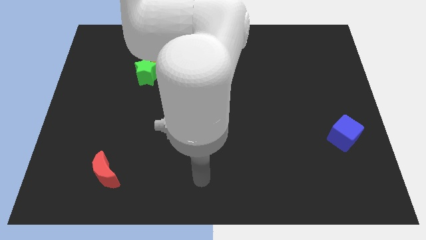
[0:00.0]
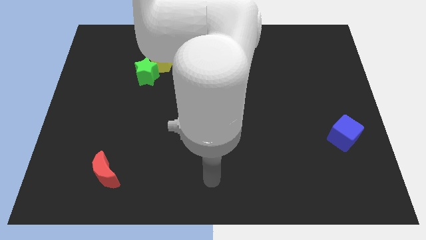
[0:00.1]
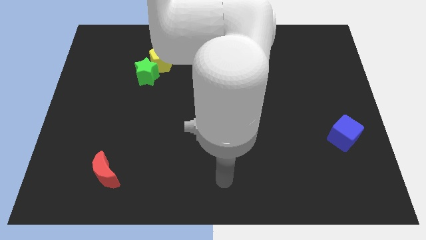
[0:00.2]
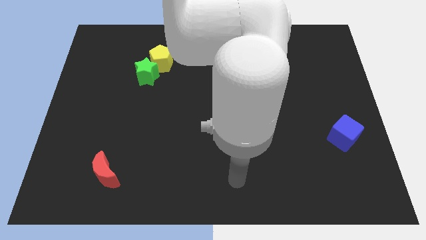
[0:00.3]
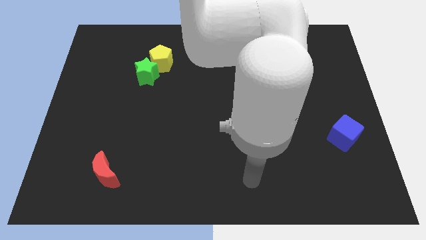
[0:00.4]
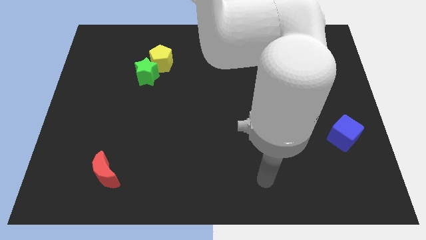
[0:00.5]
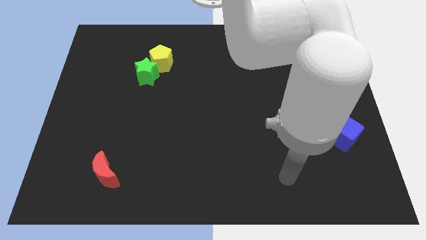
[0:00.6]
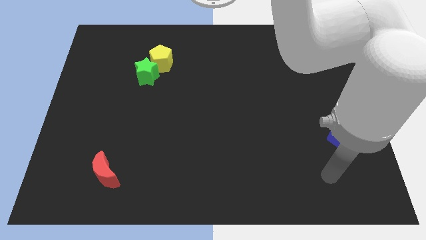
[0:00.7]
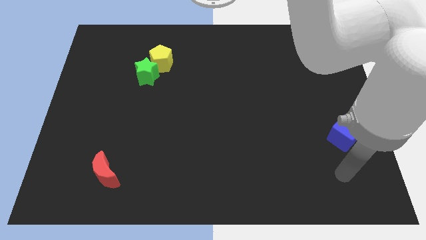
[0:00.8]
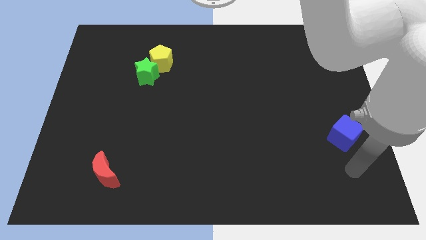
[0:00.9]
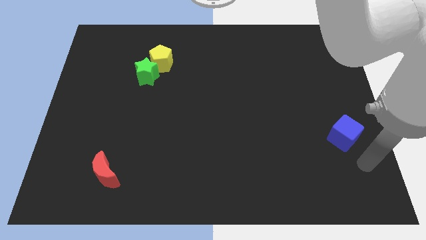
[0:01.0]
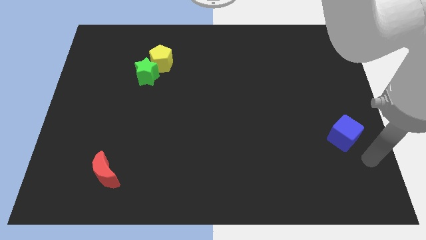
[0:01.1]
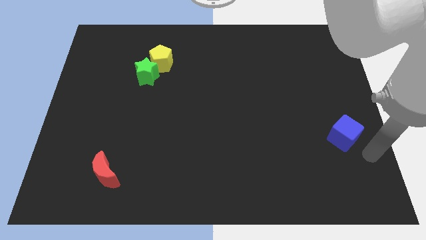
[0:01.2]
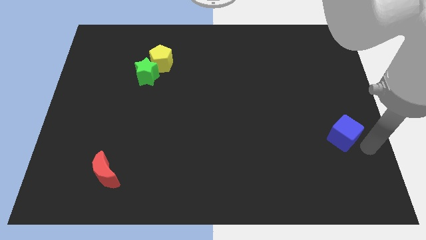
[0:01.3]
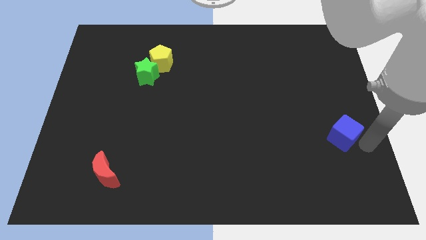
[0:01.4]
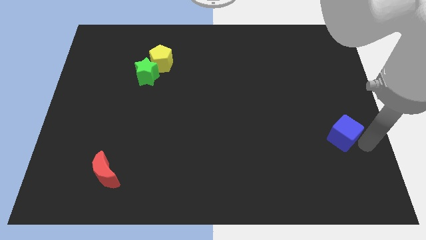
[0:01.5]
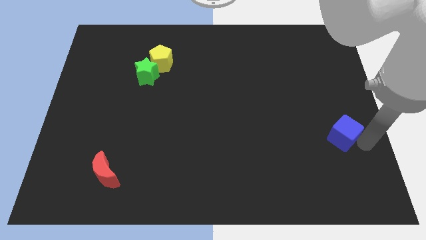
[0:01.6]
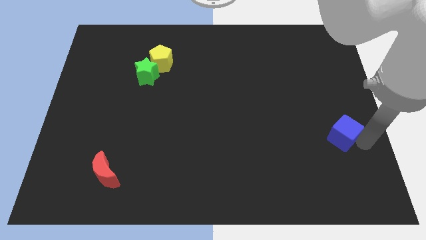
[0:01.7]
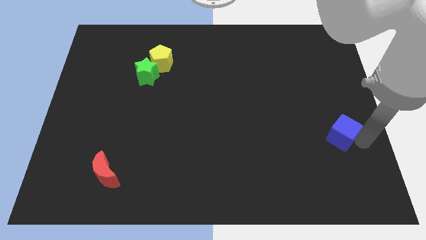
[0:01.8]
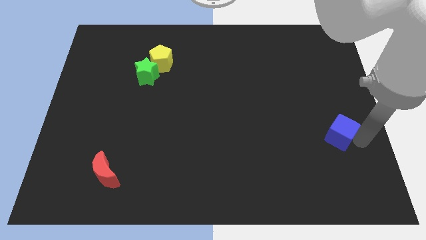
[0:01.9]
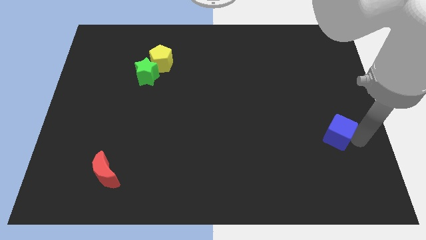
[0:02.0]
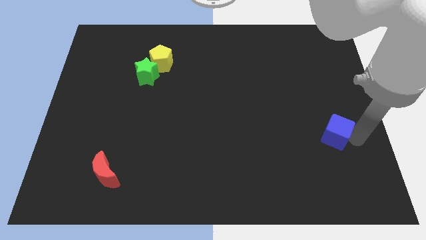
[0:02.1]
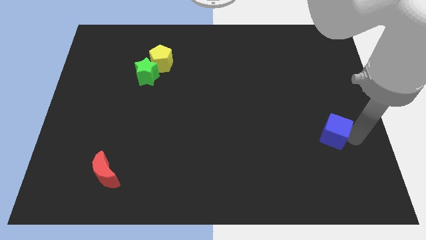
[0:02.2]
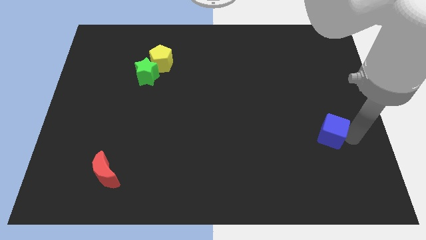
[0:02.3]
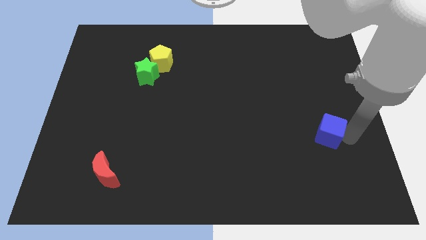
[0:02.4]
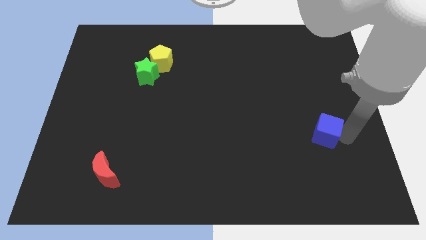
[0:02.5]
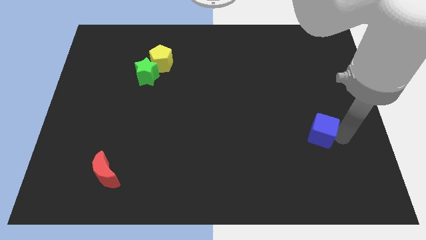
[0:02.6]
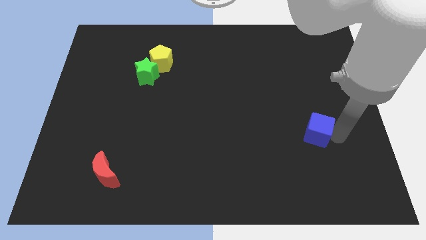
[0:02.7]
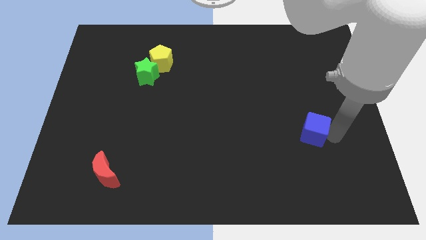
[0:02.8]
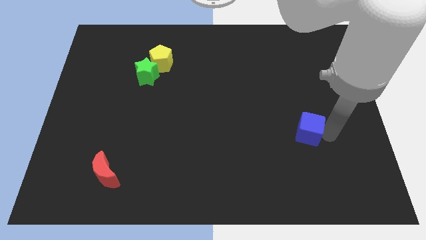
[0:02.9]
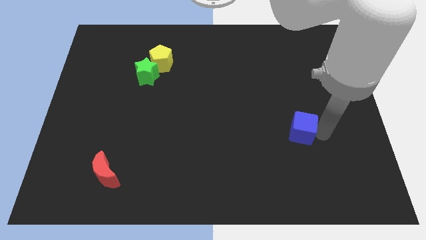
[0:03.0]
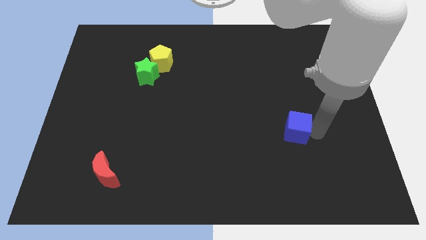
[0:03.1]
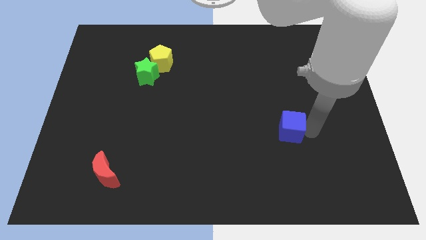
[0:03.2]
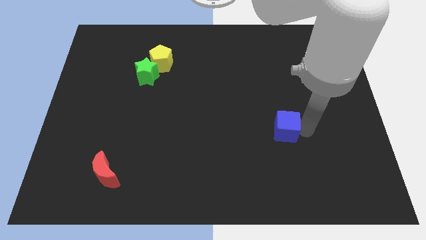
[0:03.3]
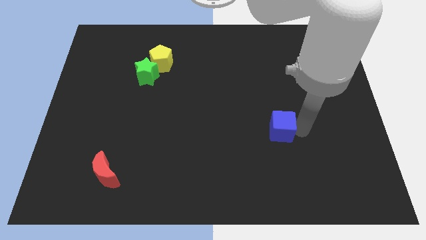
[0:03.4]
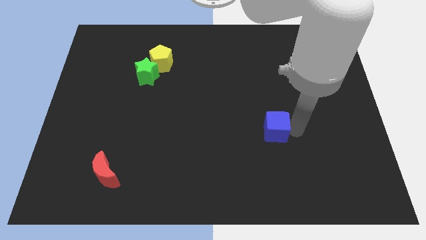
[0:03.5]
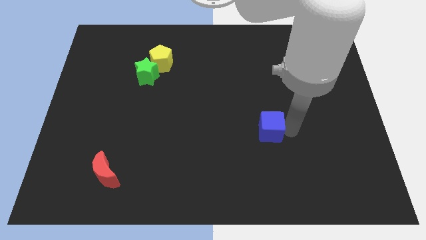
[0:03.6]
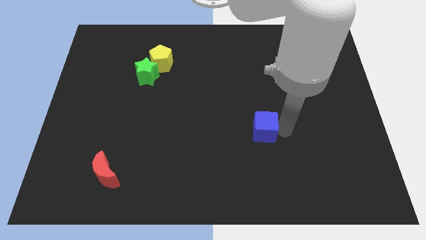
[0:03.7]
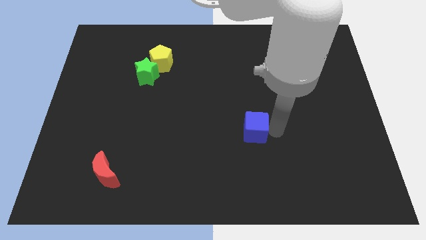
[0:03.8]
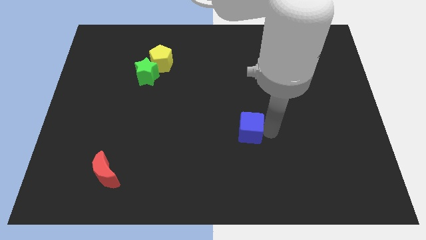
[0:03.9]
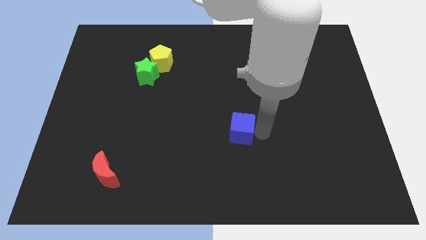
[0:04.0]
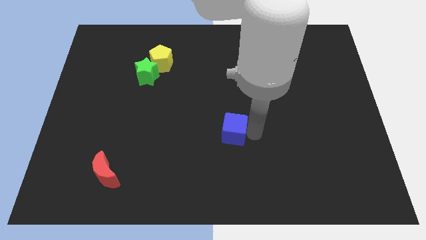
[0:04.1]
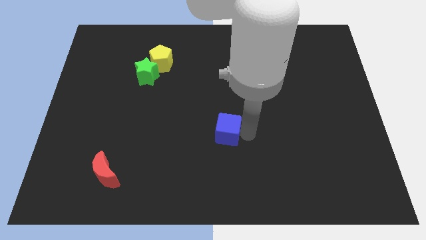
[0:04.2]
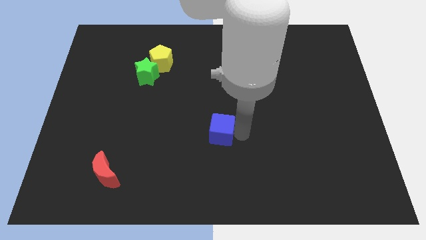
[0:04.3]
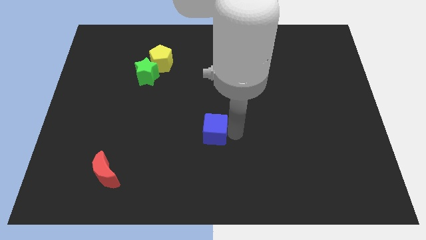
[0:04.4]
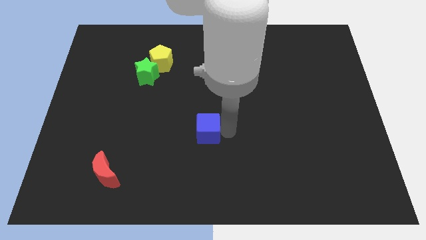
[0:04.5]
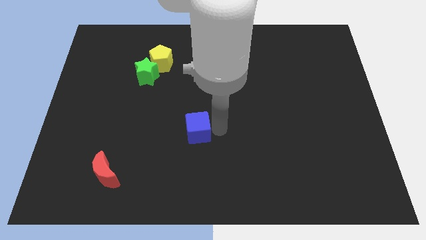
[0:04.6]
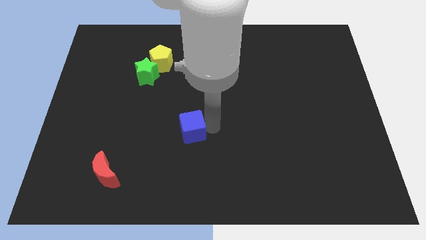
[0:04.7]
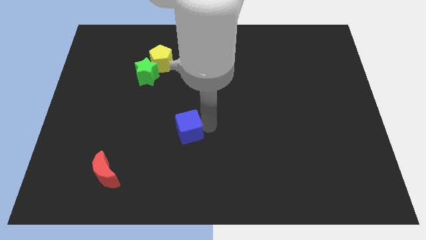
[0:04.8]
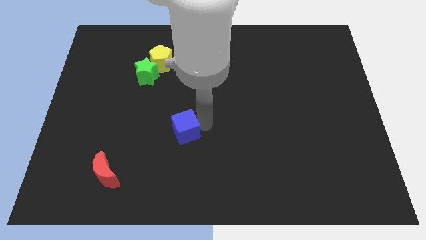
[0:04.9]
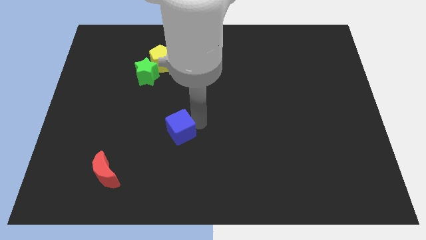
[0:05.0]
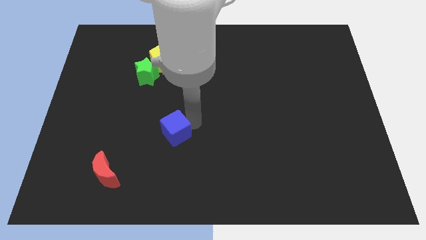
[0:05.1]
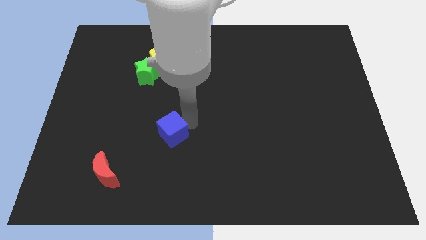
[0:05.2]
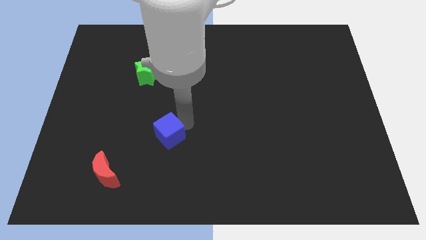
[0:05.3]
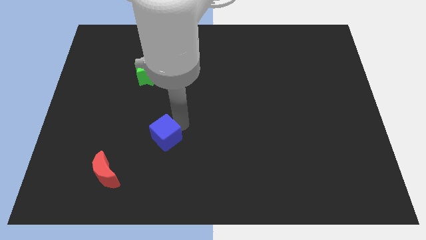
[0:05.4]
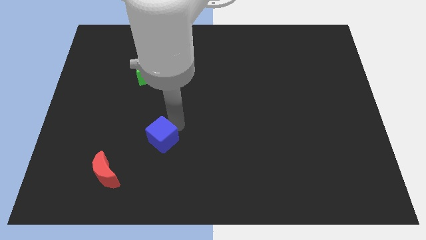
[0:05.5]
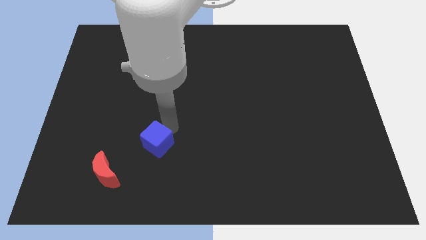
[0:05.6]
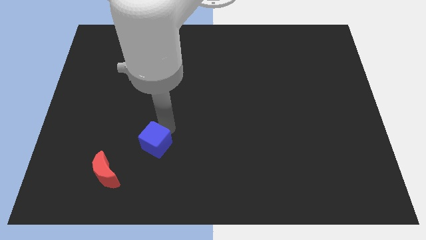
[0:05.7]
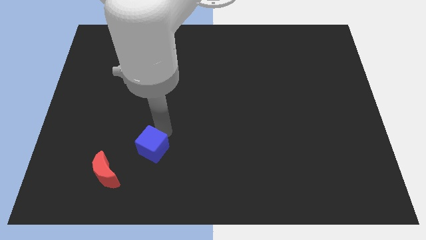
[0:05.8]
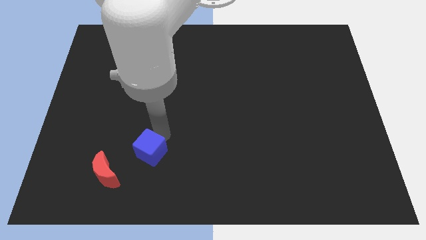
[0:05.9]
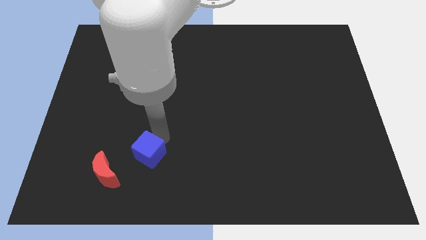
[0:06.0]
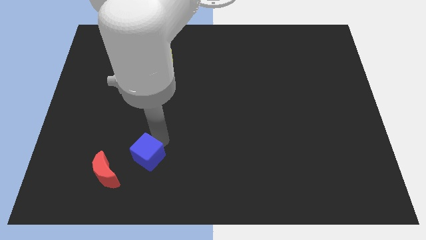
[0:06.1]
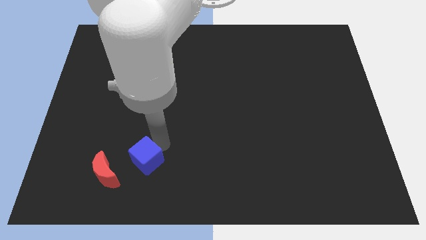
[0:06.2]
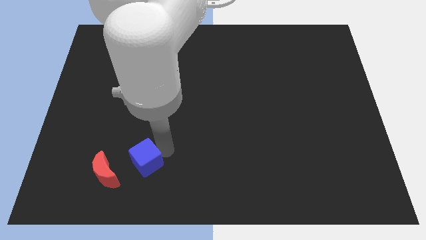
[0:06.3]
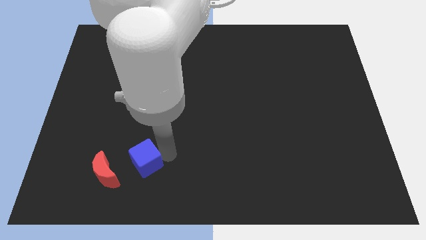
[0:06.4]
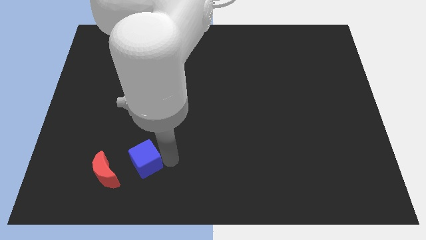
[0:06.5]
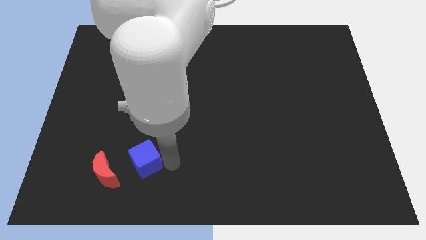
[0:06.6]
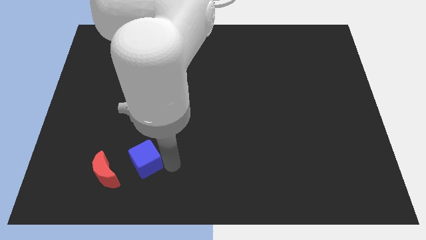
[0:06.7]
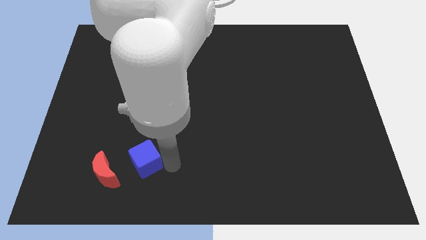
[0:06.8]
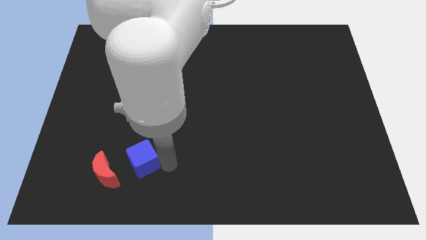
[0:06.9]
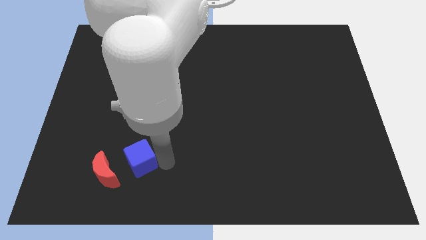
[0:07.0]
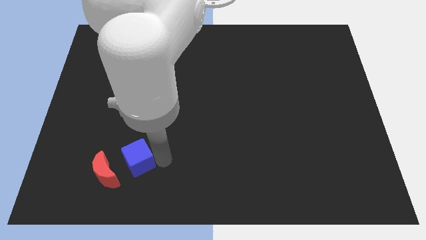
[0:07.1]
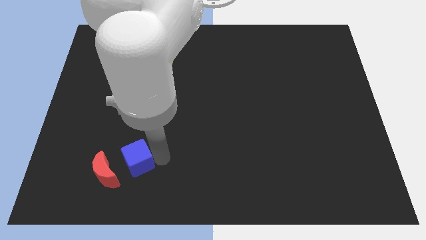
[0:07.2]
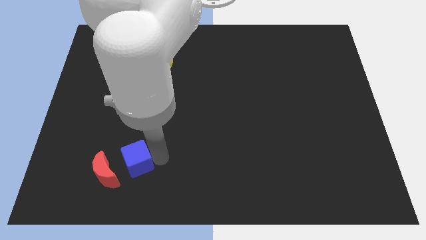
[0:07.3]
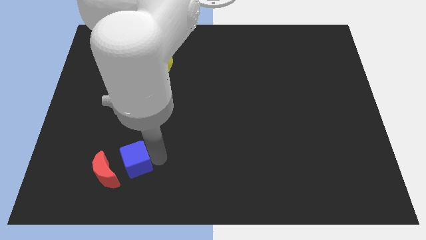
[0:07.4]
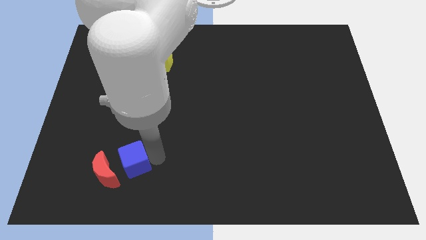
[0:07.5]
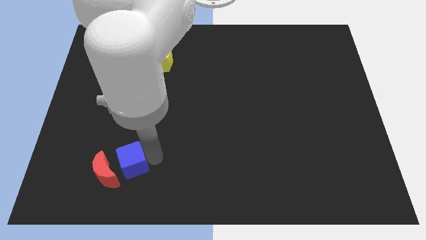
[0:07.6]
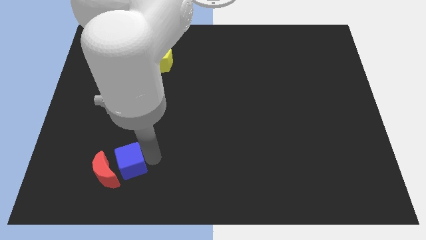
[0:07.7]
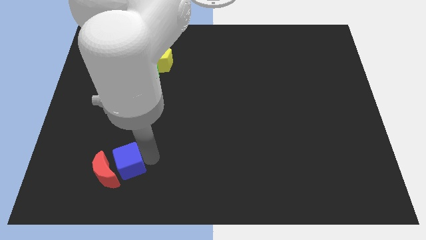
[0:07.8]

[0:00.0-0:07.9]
move the blue block next to the red block

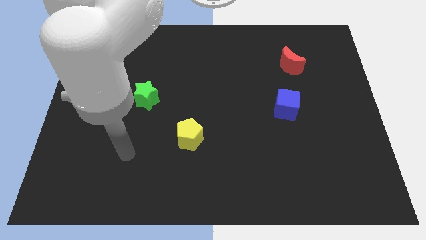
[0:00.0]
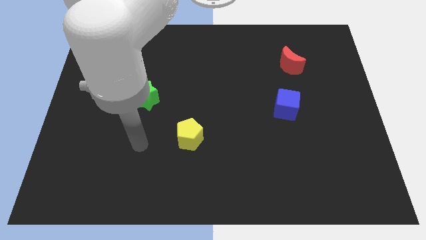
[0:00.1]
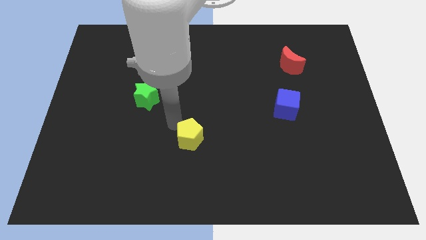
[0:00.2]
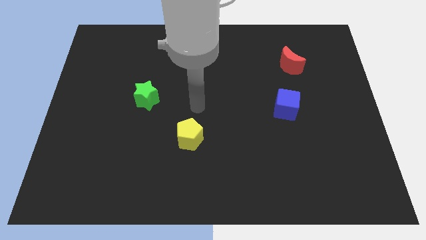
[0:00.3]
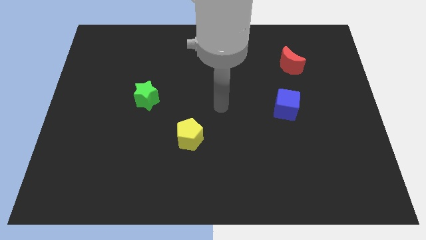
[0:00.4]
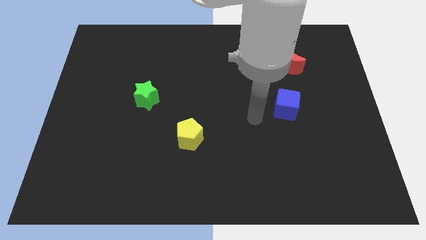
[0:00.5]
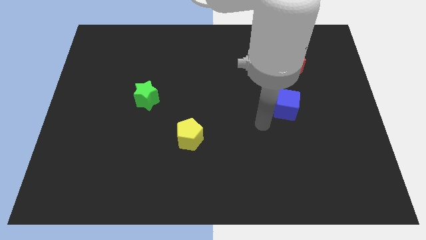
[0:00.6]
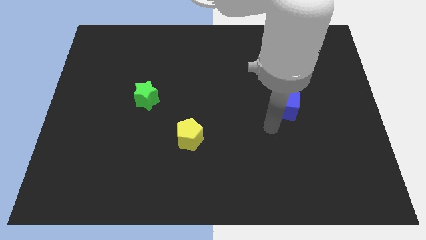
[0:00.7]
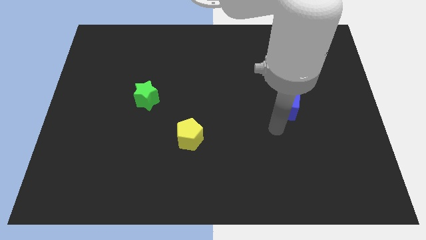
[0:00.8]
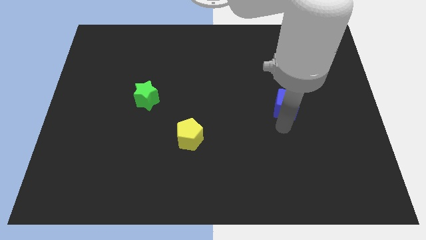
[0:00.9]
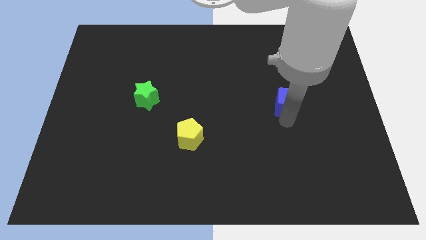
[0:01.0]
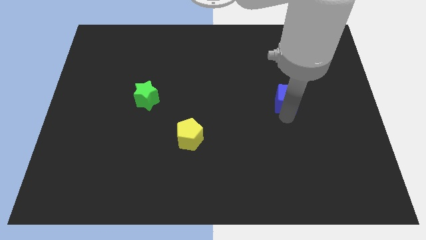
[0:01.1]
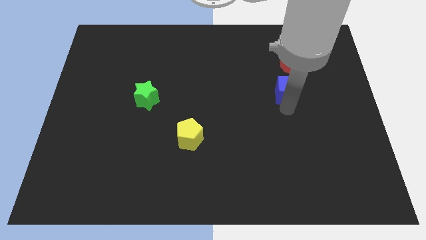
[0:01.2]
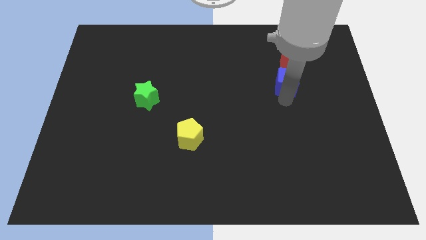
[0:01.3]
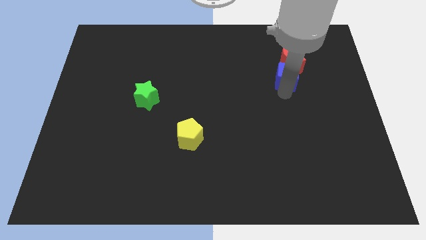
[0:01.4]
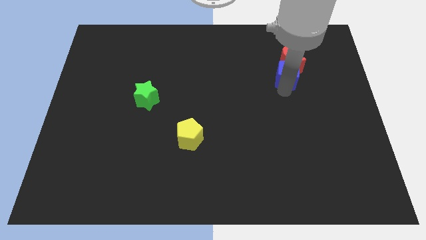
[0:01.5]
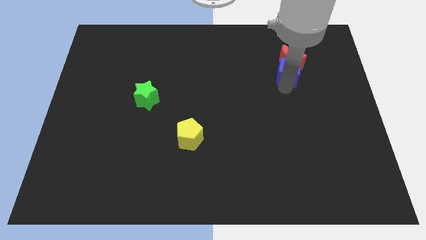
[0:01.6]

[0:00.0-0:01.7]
put the blue cube towards the red moon
